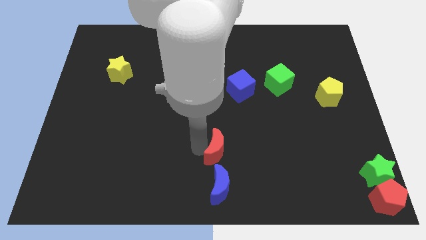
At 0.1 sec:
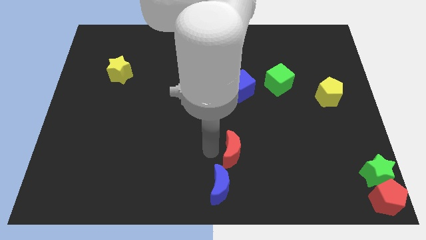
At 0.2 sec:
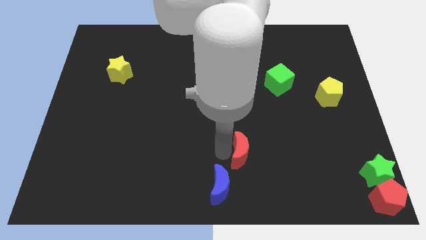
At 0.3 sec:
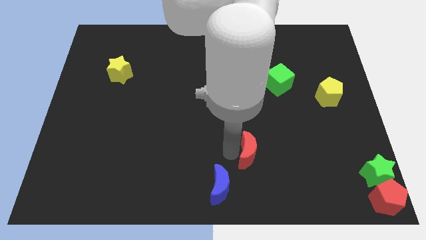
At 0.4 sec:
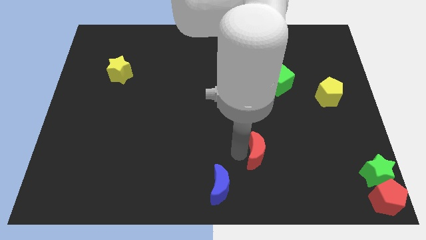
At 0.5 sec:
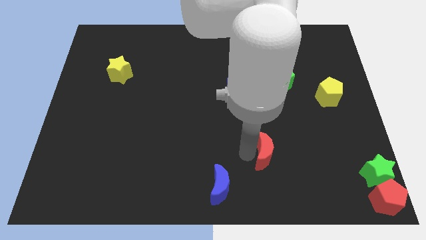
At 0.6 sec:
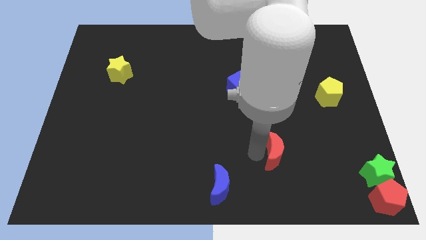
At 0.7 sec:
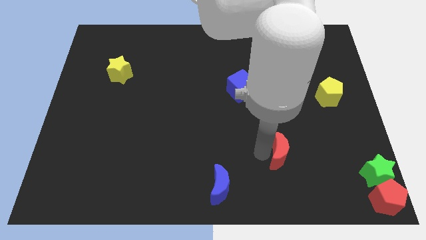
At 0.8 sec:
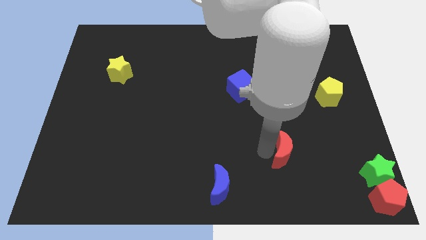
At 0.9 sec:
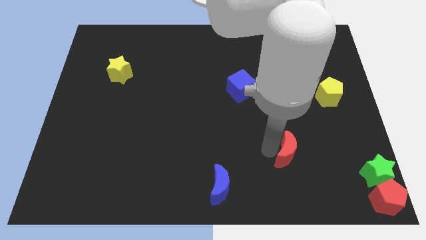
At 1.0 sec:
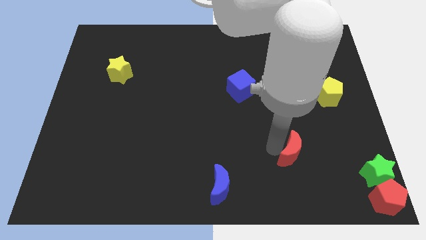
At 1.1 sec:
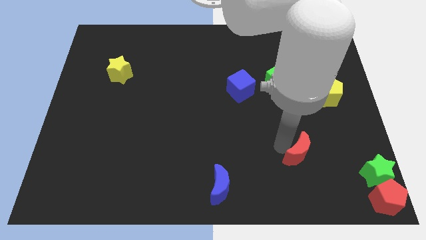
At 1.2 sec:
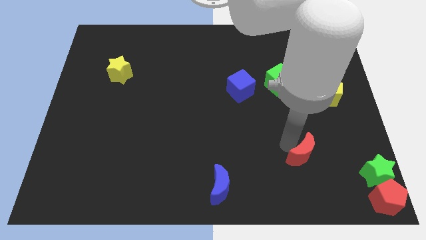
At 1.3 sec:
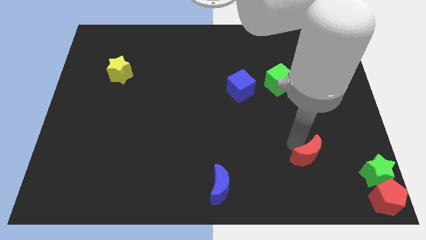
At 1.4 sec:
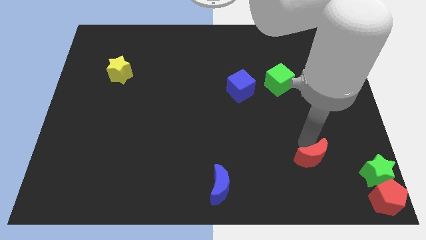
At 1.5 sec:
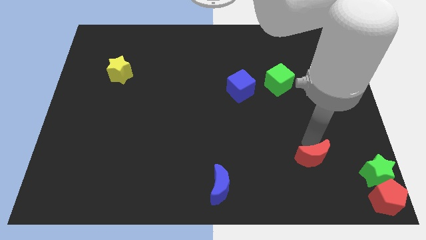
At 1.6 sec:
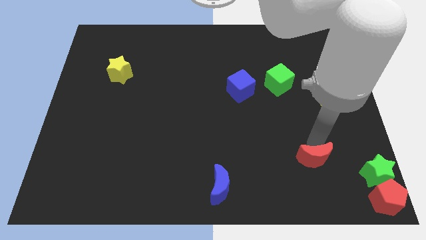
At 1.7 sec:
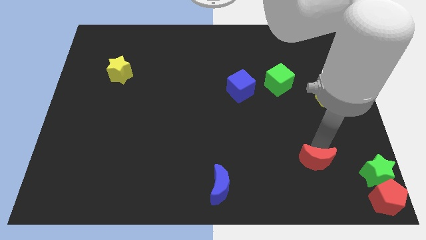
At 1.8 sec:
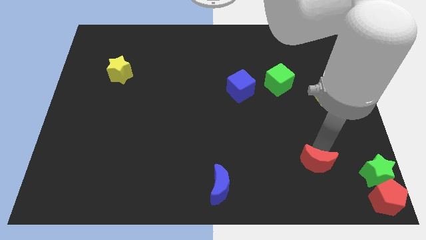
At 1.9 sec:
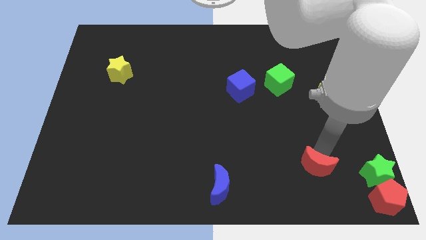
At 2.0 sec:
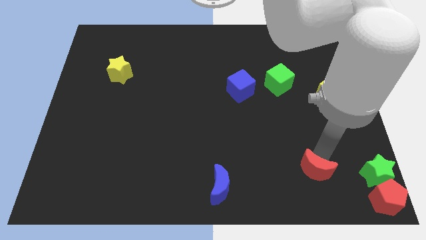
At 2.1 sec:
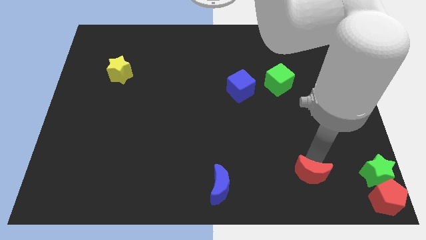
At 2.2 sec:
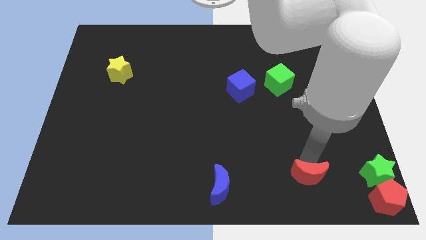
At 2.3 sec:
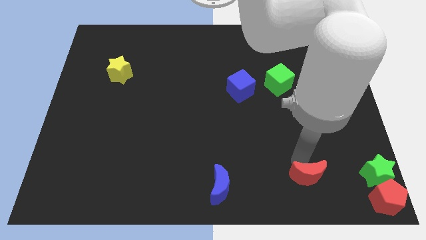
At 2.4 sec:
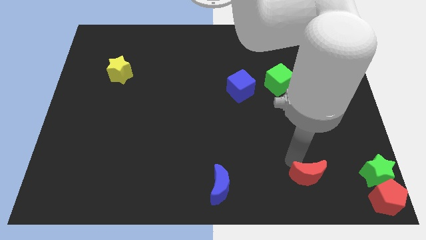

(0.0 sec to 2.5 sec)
move the red moon to the right of blue crescent

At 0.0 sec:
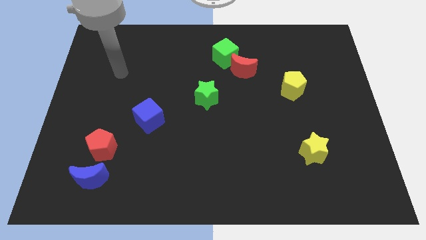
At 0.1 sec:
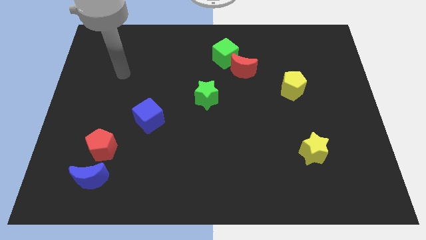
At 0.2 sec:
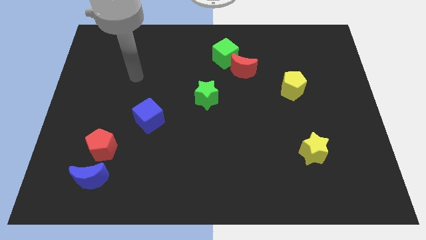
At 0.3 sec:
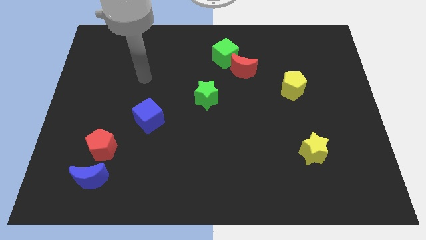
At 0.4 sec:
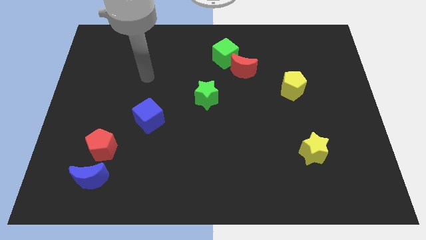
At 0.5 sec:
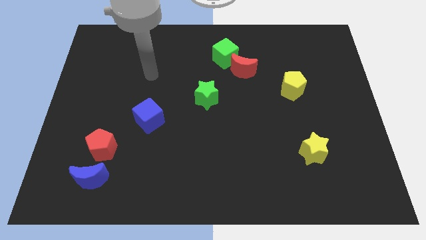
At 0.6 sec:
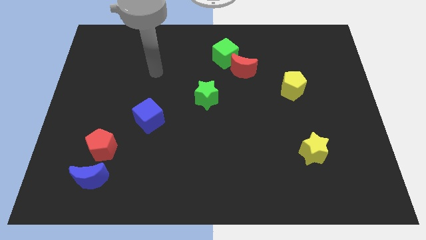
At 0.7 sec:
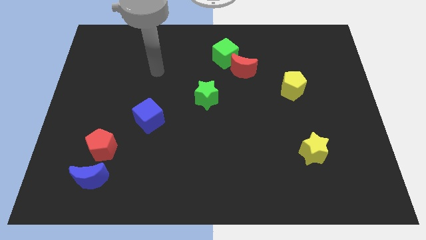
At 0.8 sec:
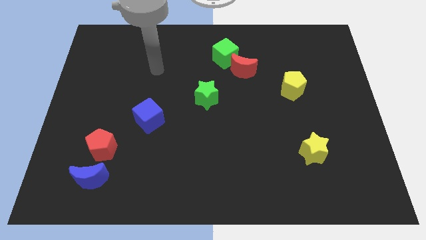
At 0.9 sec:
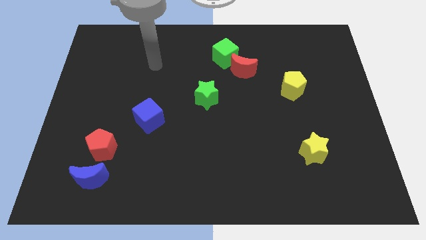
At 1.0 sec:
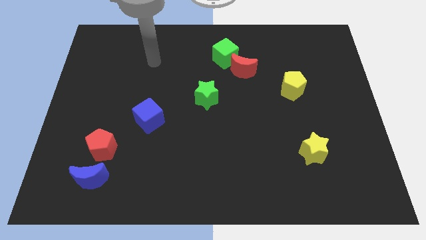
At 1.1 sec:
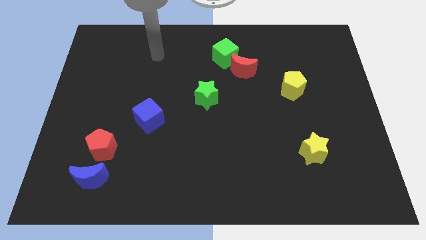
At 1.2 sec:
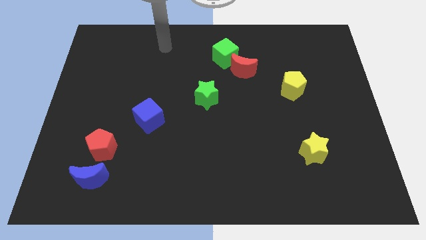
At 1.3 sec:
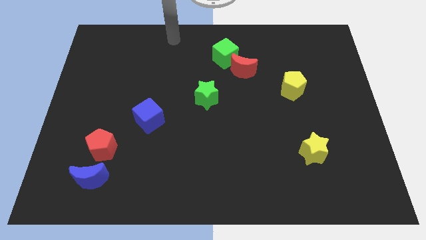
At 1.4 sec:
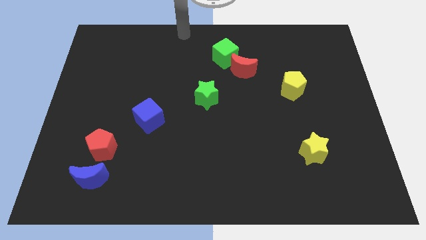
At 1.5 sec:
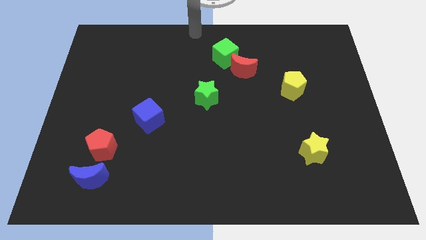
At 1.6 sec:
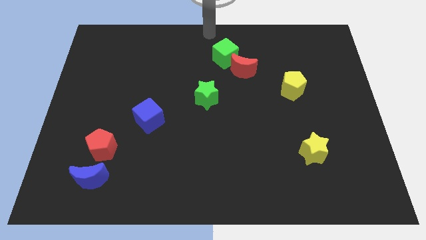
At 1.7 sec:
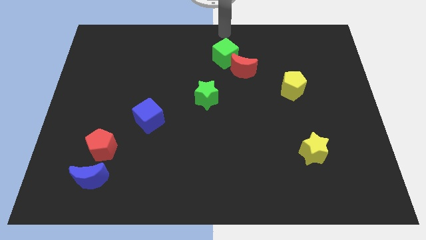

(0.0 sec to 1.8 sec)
move your arm to the top center of the board

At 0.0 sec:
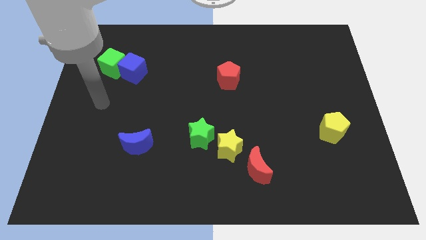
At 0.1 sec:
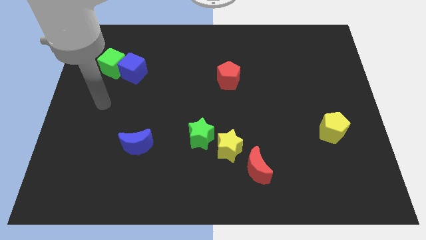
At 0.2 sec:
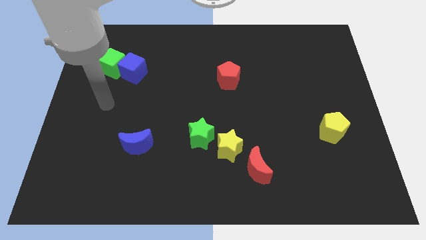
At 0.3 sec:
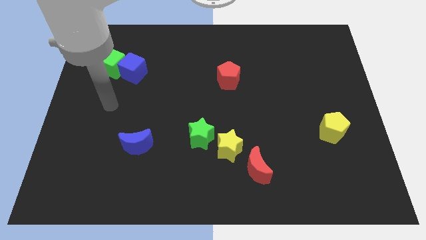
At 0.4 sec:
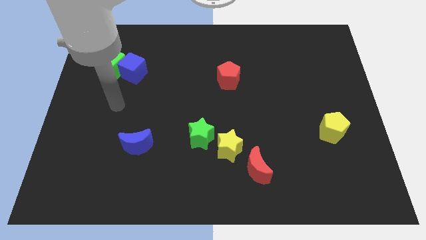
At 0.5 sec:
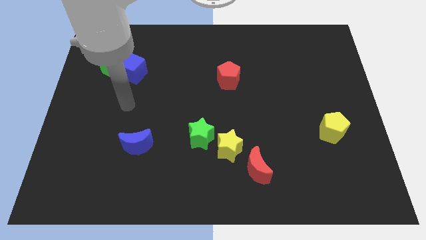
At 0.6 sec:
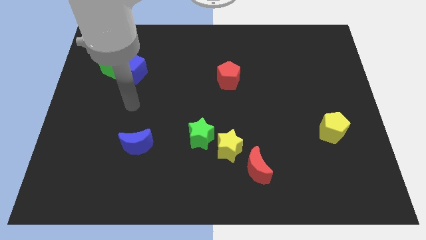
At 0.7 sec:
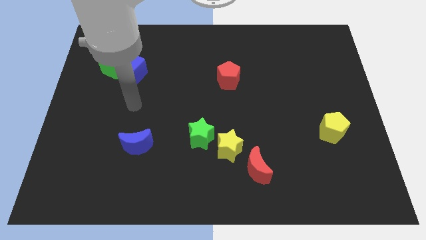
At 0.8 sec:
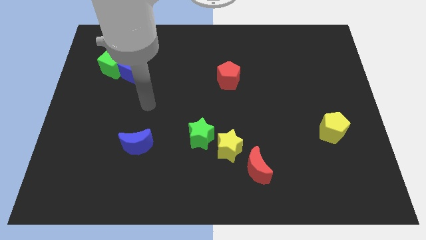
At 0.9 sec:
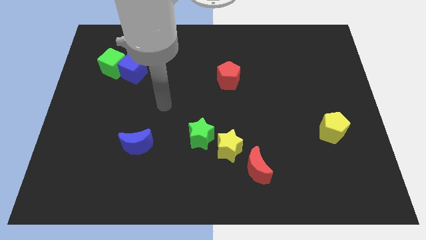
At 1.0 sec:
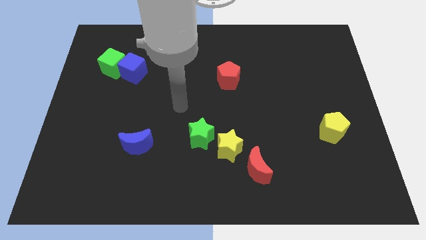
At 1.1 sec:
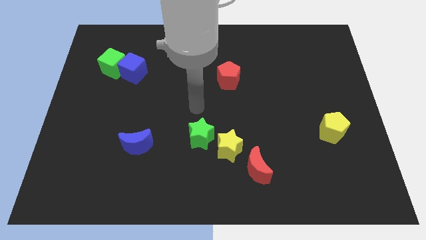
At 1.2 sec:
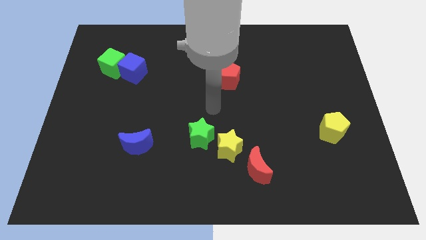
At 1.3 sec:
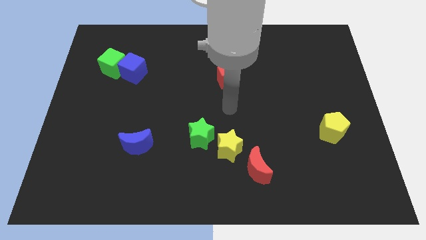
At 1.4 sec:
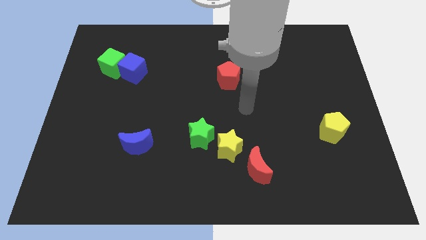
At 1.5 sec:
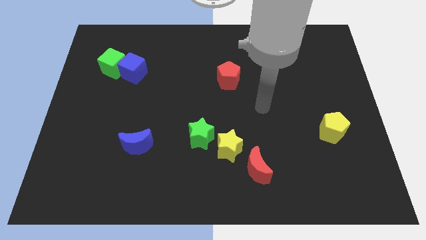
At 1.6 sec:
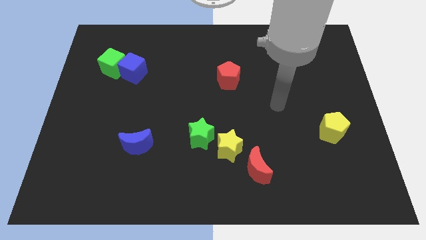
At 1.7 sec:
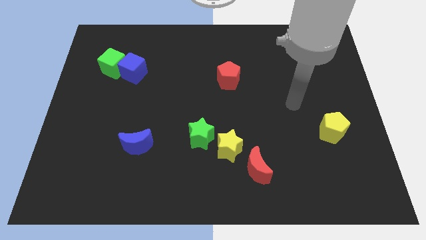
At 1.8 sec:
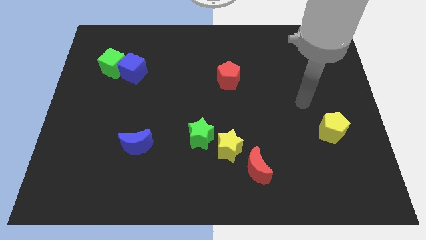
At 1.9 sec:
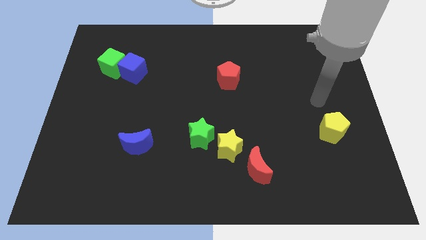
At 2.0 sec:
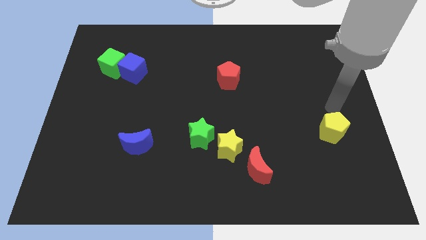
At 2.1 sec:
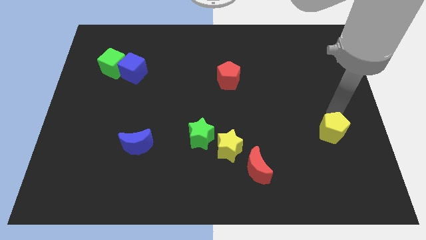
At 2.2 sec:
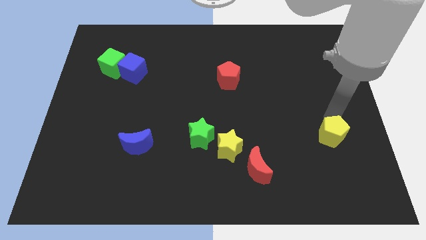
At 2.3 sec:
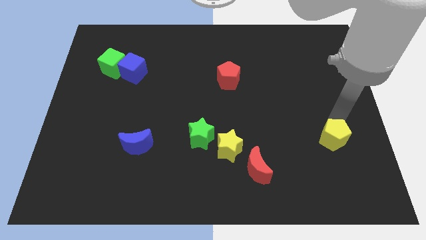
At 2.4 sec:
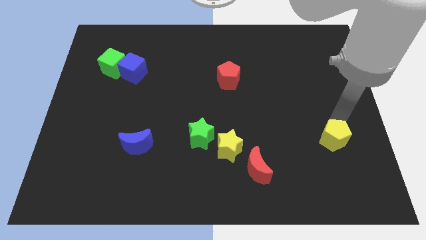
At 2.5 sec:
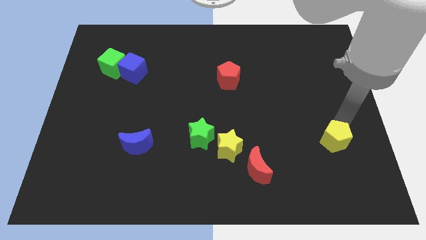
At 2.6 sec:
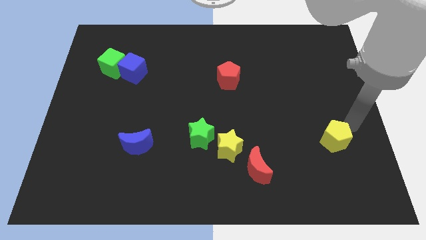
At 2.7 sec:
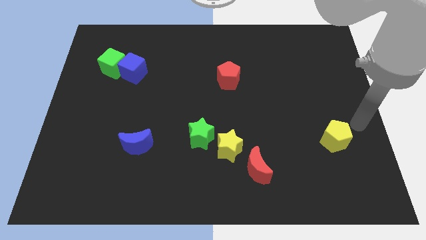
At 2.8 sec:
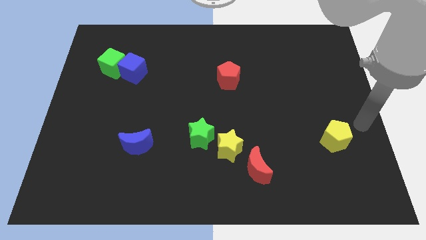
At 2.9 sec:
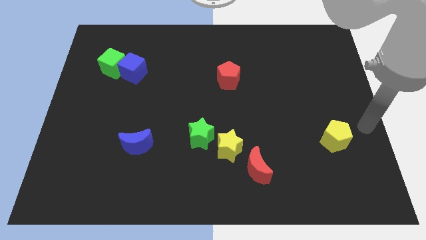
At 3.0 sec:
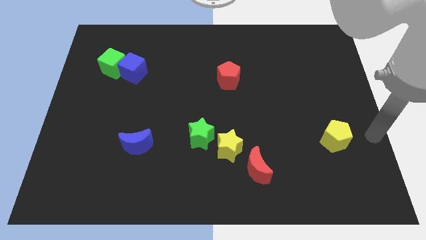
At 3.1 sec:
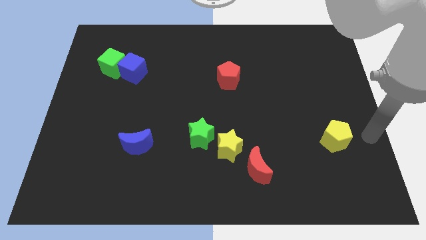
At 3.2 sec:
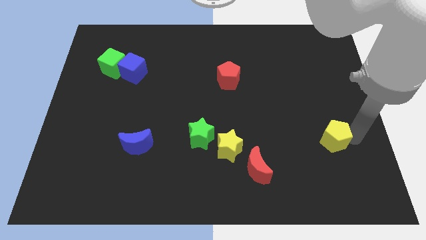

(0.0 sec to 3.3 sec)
place the arm to the right of the yellow pentagon

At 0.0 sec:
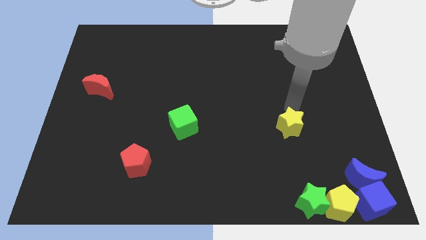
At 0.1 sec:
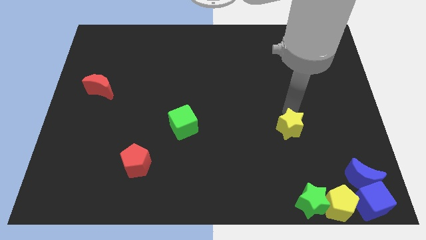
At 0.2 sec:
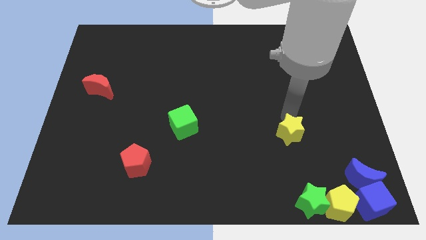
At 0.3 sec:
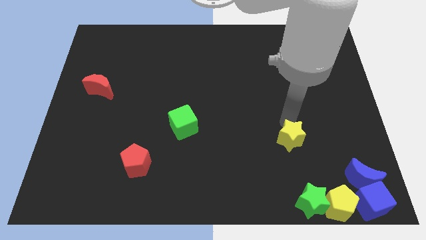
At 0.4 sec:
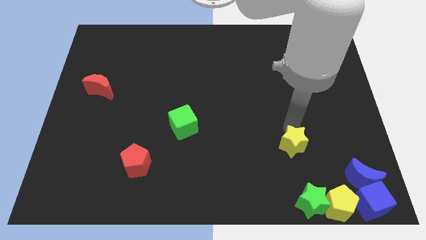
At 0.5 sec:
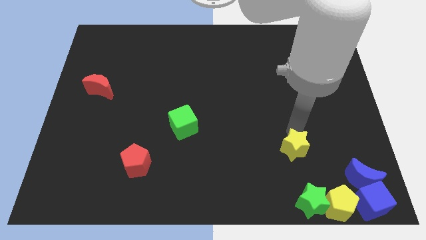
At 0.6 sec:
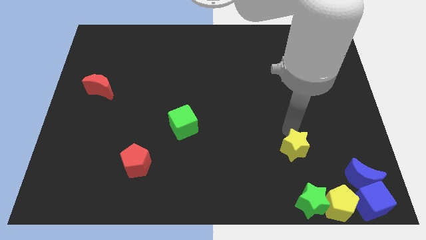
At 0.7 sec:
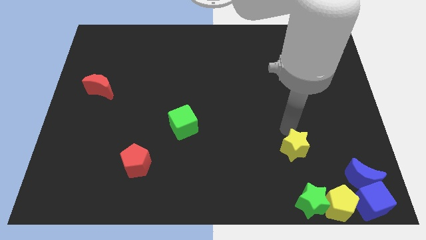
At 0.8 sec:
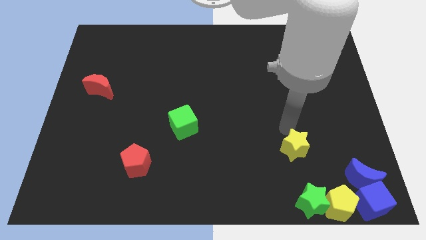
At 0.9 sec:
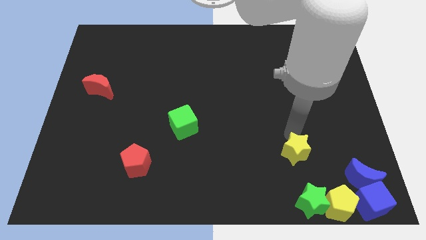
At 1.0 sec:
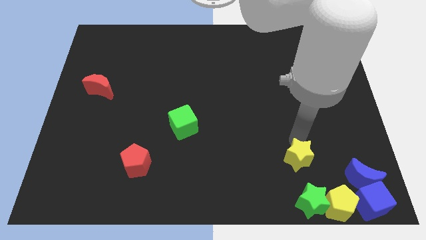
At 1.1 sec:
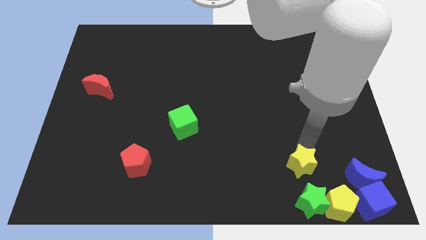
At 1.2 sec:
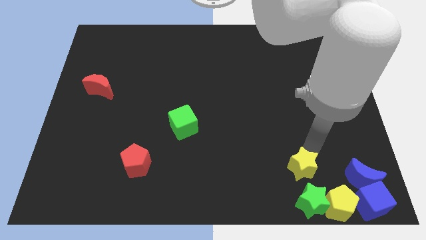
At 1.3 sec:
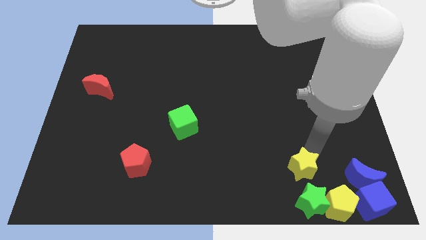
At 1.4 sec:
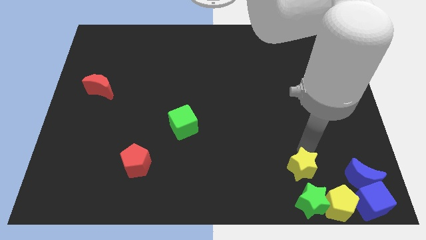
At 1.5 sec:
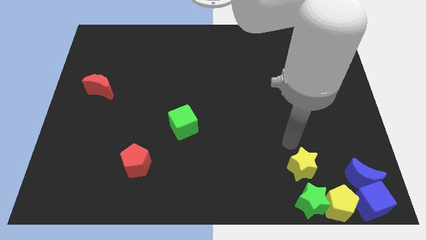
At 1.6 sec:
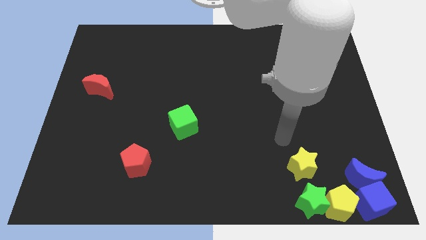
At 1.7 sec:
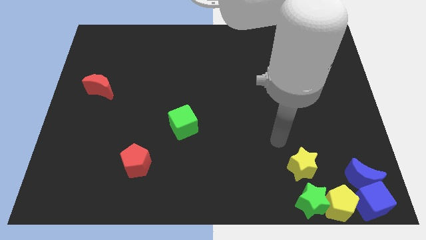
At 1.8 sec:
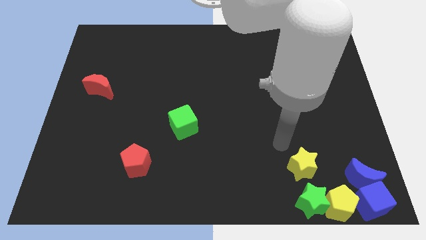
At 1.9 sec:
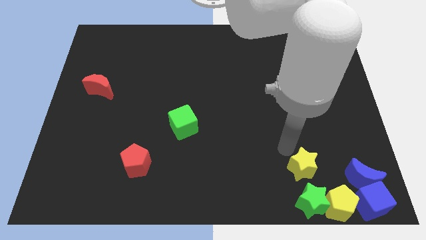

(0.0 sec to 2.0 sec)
move the yellow star above the green star
